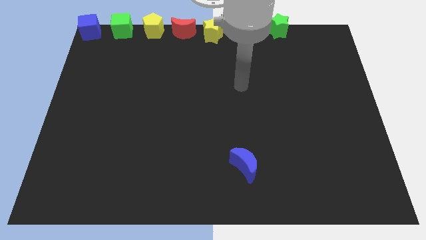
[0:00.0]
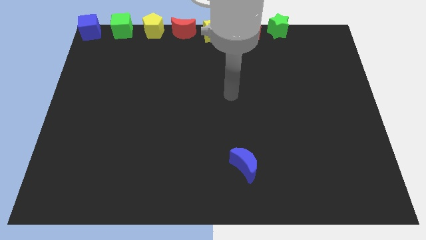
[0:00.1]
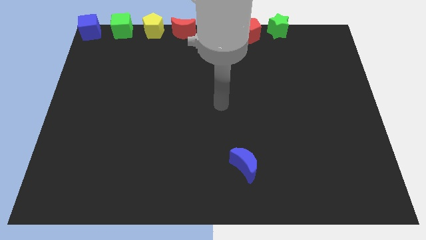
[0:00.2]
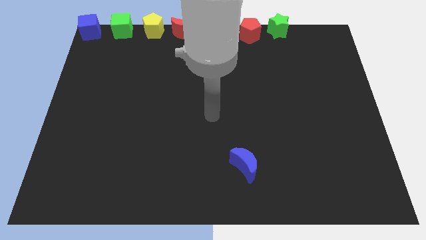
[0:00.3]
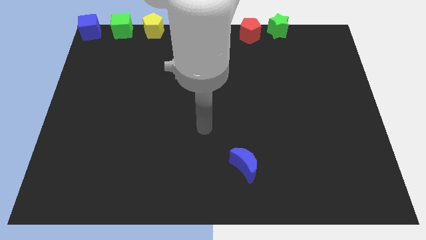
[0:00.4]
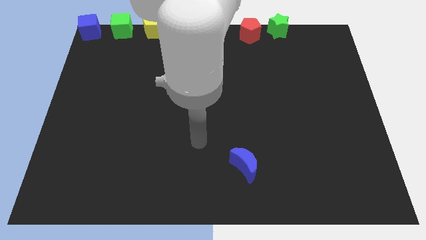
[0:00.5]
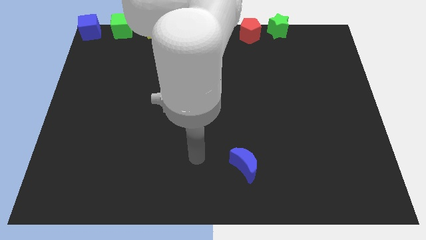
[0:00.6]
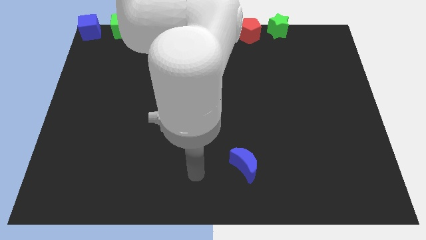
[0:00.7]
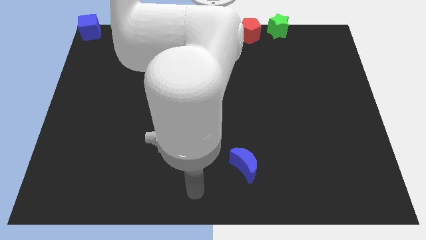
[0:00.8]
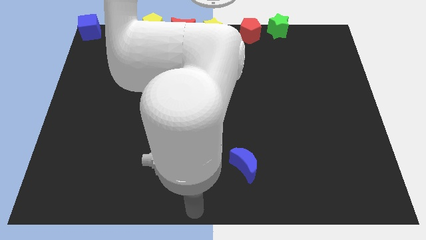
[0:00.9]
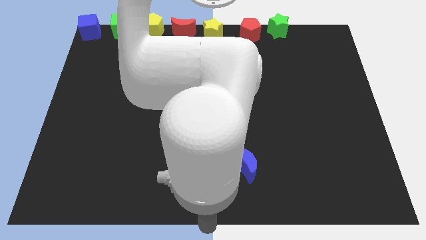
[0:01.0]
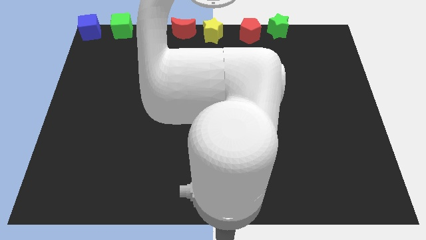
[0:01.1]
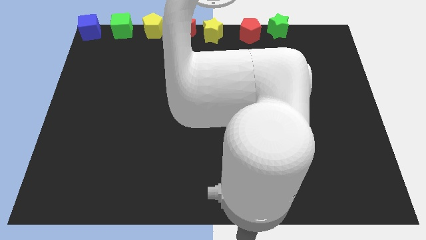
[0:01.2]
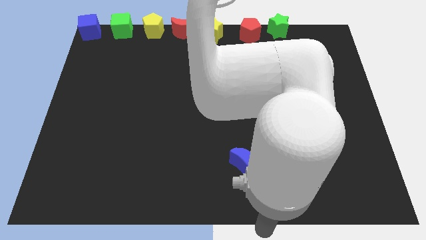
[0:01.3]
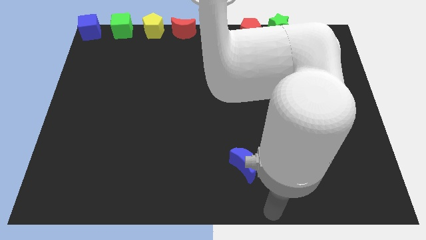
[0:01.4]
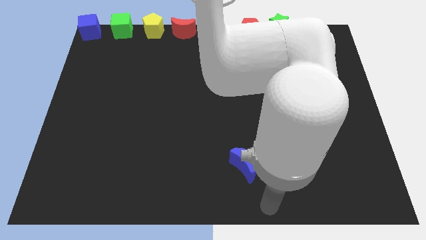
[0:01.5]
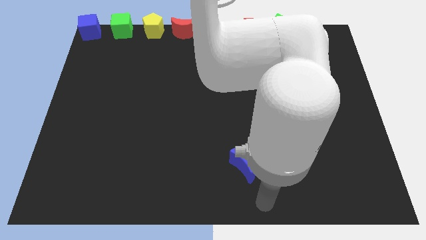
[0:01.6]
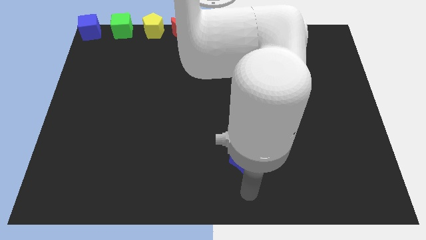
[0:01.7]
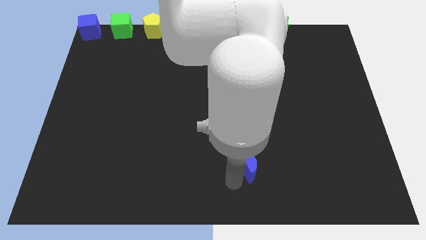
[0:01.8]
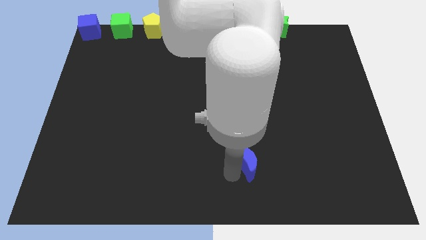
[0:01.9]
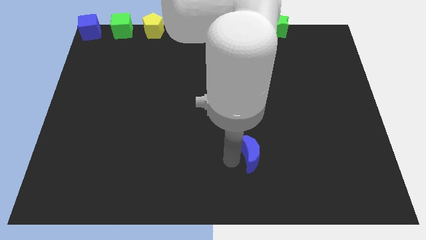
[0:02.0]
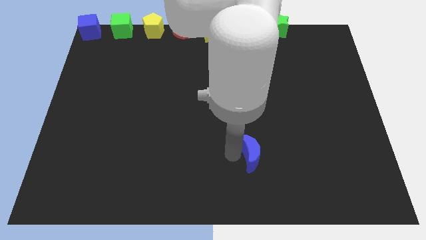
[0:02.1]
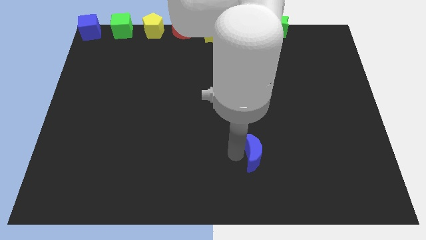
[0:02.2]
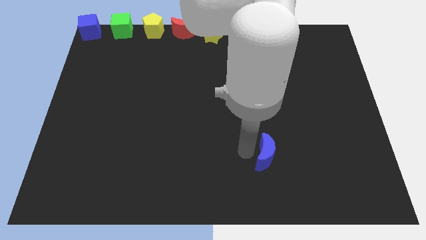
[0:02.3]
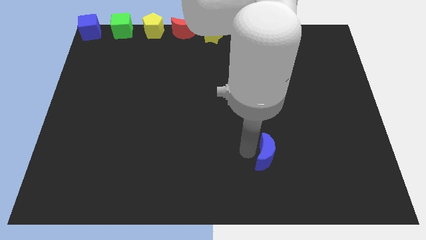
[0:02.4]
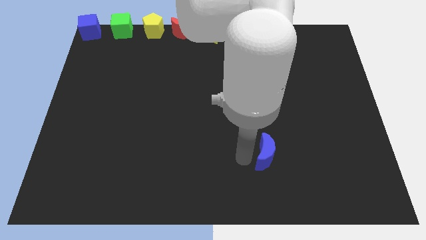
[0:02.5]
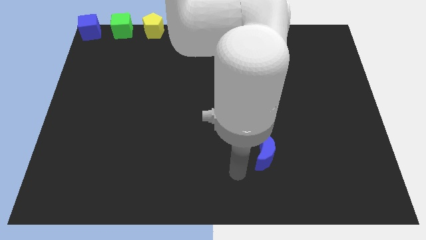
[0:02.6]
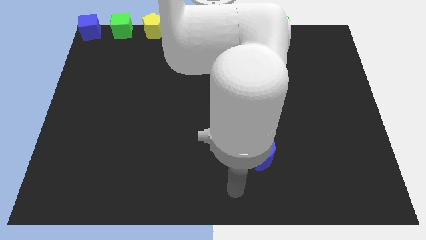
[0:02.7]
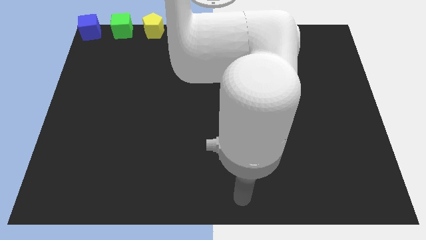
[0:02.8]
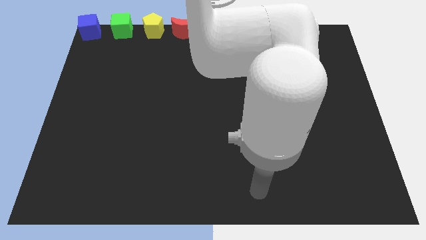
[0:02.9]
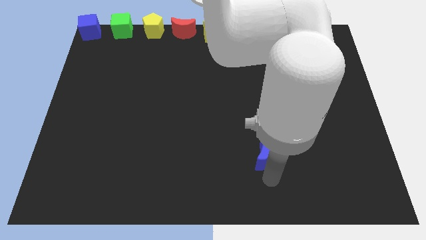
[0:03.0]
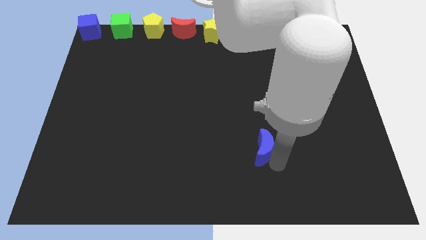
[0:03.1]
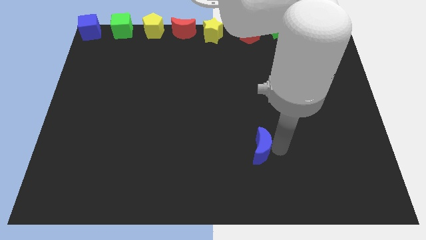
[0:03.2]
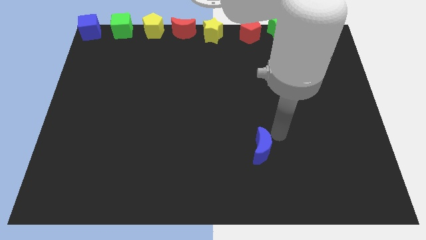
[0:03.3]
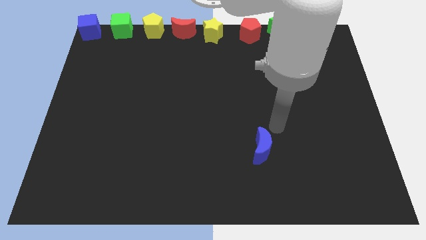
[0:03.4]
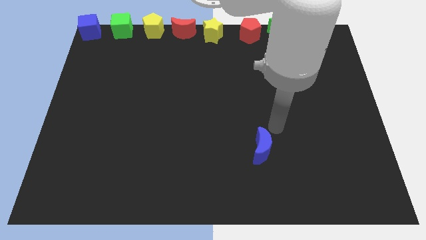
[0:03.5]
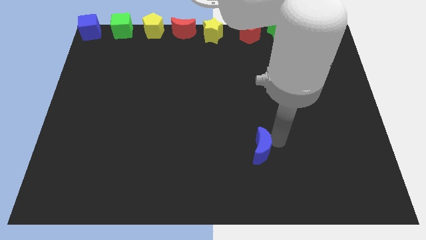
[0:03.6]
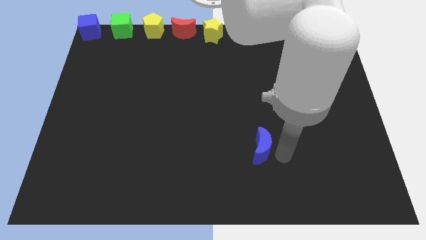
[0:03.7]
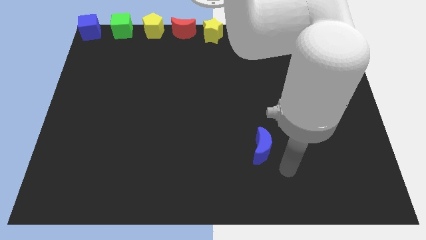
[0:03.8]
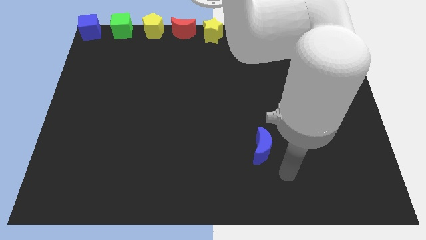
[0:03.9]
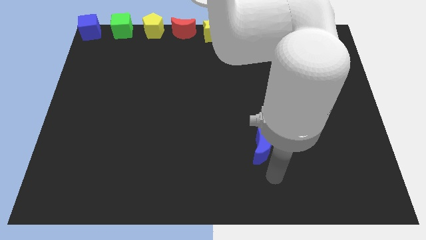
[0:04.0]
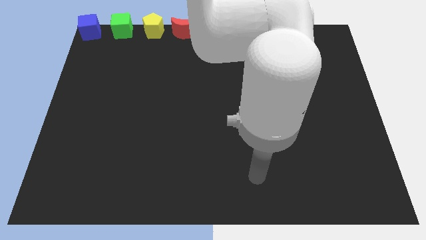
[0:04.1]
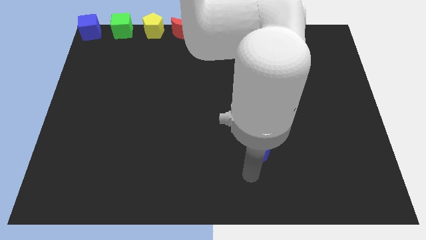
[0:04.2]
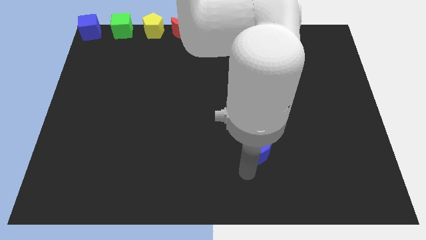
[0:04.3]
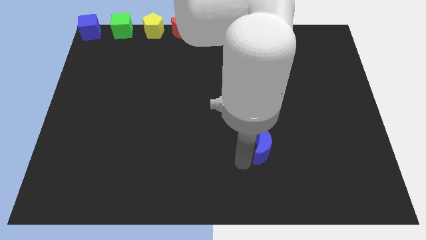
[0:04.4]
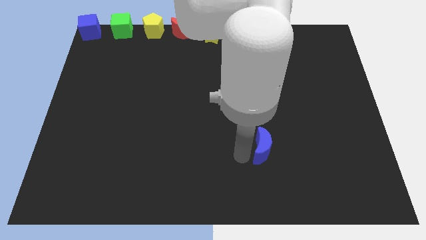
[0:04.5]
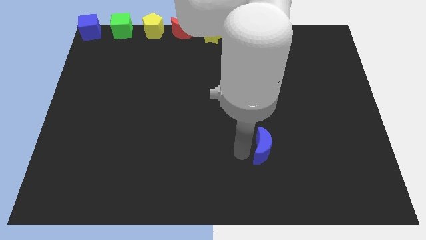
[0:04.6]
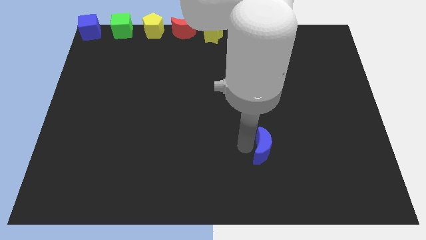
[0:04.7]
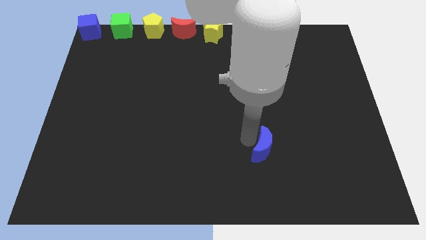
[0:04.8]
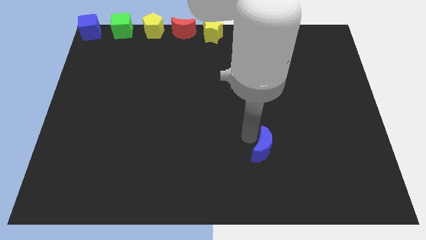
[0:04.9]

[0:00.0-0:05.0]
slightly move the blue crescent to the top of the board

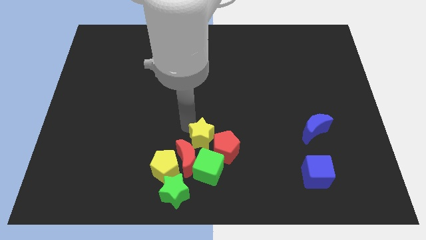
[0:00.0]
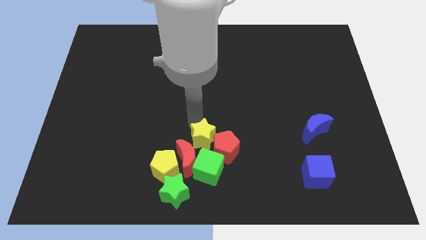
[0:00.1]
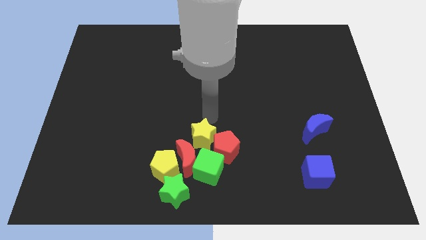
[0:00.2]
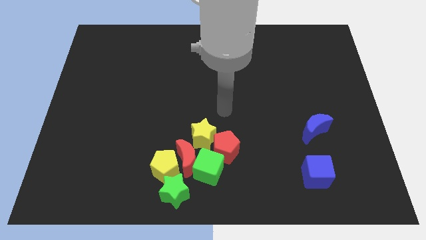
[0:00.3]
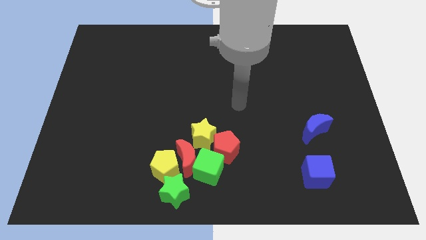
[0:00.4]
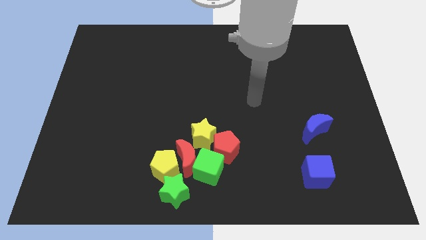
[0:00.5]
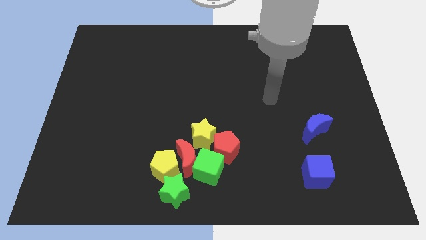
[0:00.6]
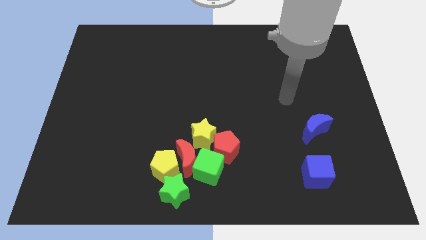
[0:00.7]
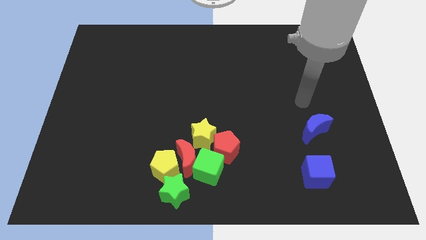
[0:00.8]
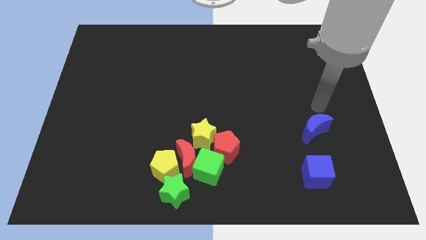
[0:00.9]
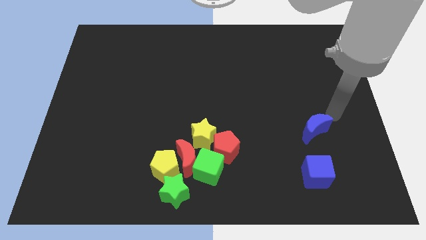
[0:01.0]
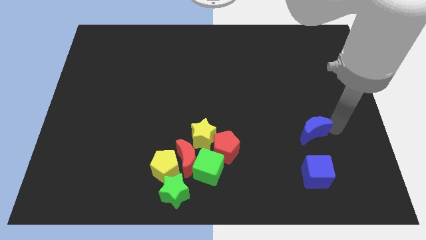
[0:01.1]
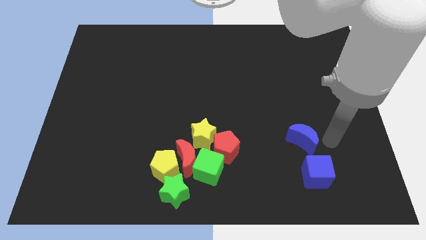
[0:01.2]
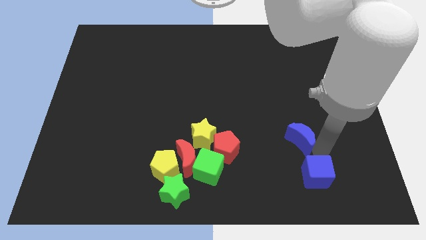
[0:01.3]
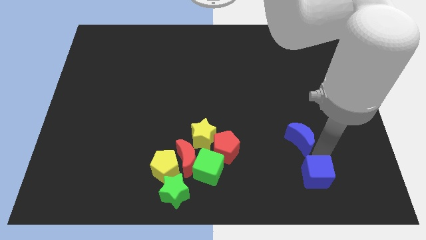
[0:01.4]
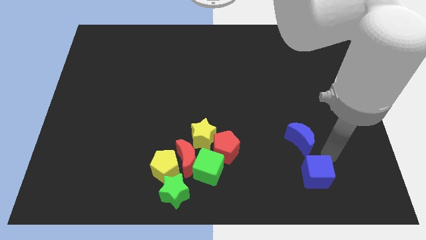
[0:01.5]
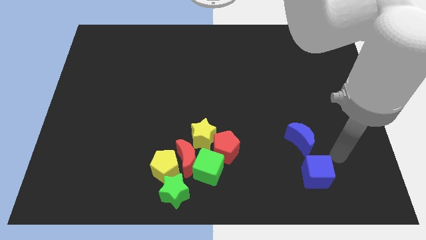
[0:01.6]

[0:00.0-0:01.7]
slightly move the blue crescent to left side

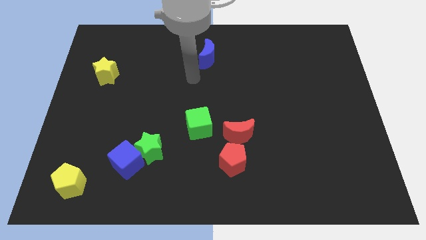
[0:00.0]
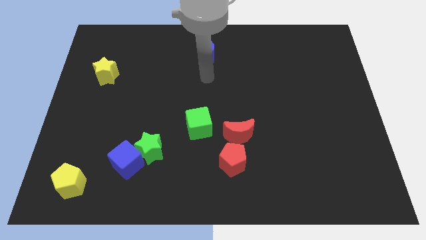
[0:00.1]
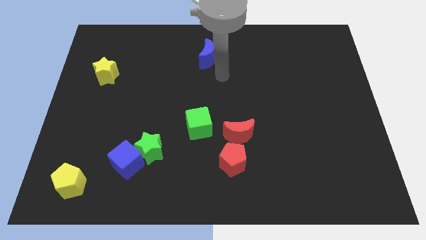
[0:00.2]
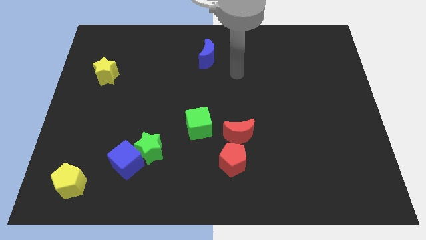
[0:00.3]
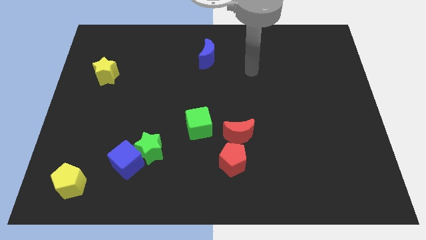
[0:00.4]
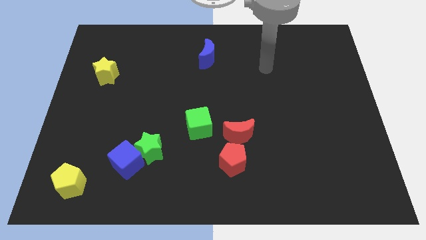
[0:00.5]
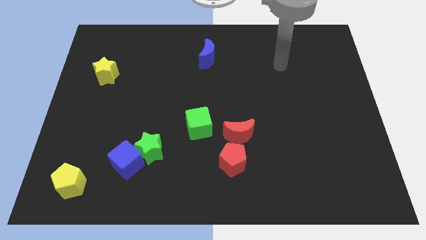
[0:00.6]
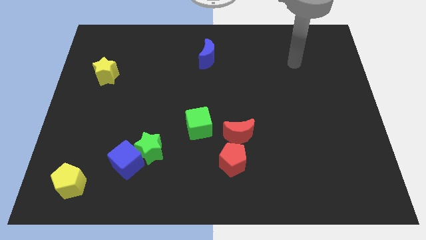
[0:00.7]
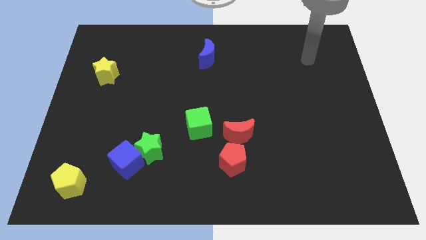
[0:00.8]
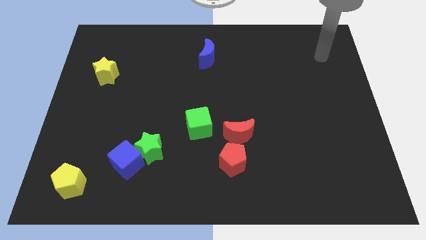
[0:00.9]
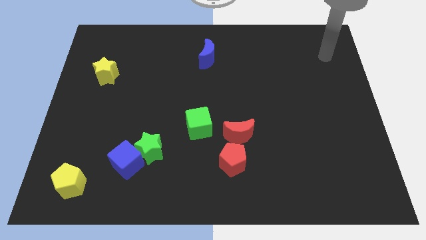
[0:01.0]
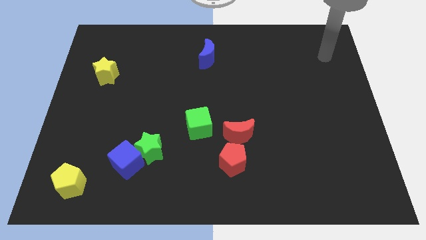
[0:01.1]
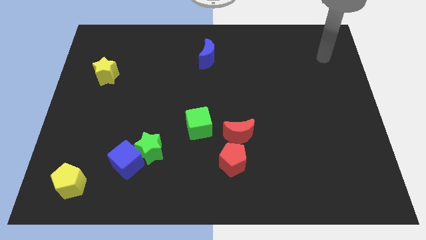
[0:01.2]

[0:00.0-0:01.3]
move your arm towards top right side of the board

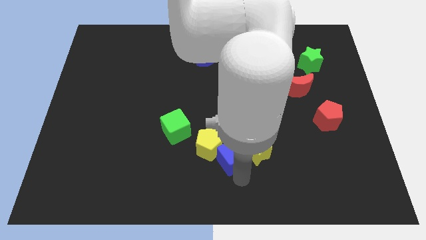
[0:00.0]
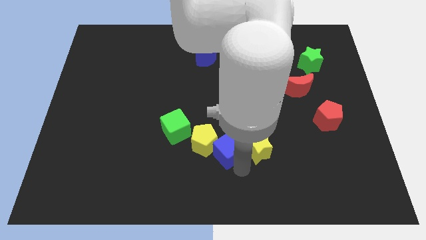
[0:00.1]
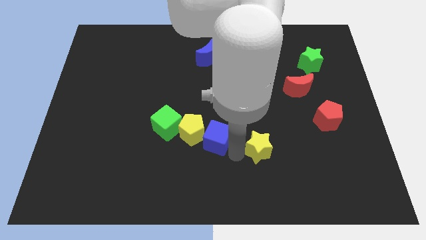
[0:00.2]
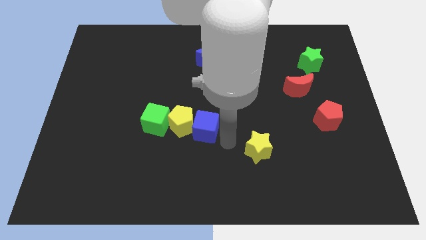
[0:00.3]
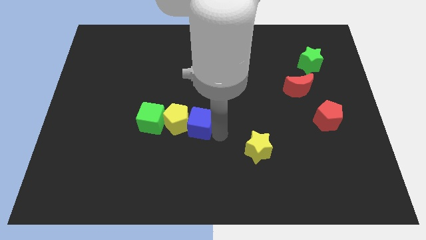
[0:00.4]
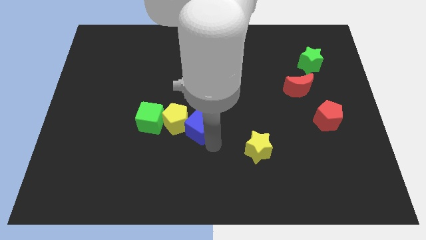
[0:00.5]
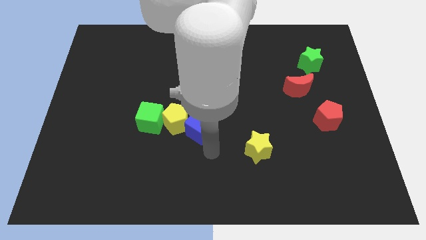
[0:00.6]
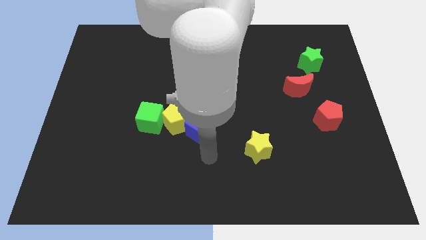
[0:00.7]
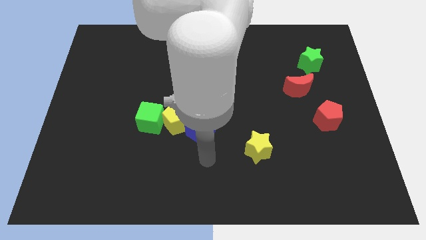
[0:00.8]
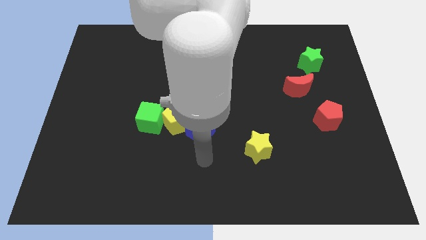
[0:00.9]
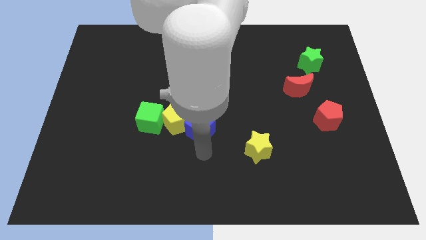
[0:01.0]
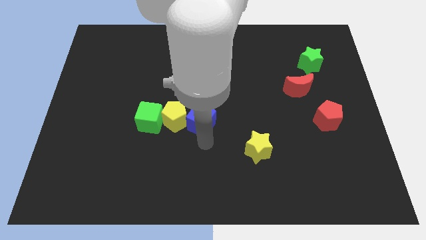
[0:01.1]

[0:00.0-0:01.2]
push the blue cube slightly towards the left along with the yellow pentagon and green cube
